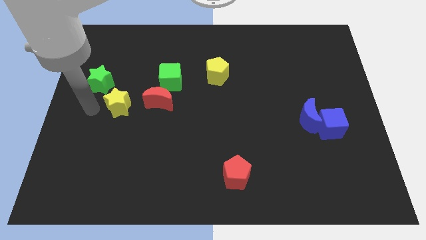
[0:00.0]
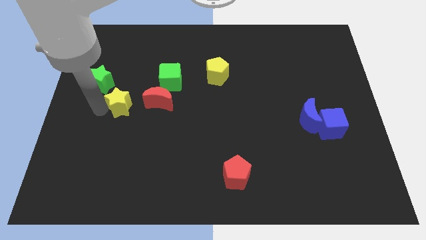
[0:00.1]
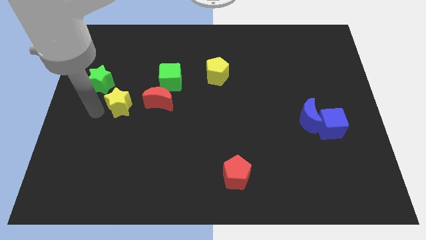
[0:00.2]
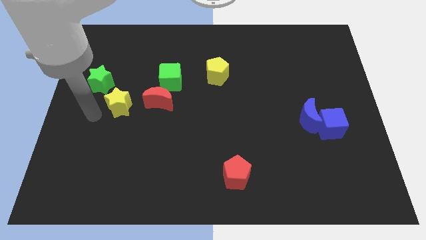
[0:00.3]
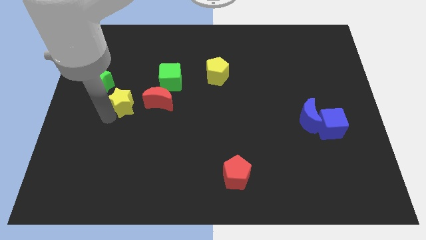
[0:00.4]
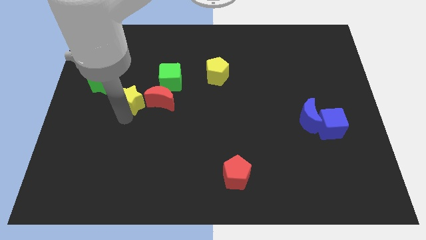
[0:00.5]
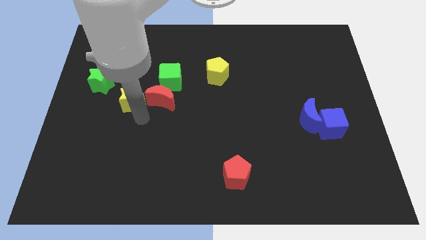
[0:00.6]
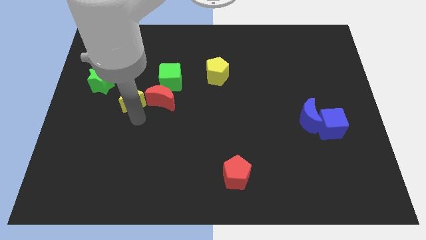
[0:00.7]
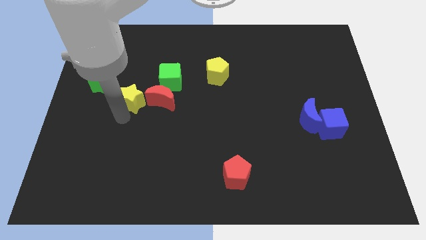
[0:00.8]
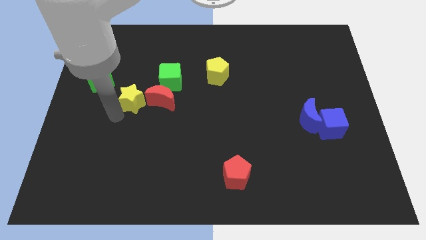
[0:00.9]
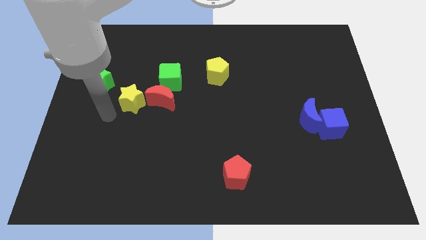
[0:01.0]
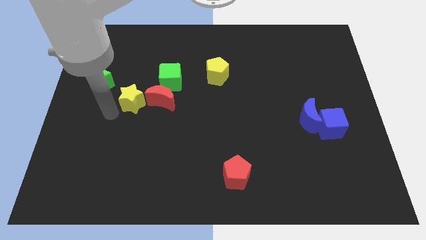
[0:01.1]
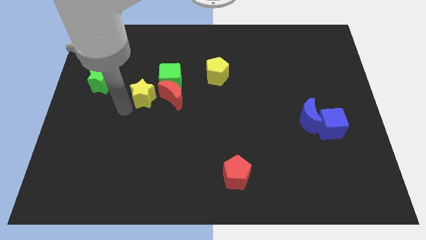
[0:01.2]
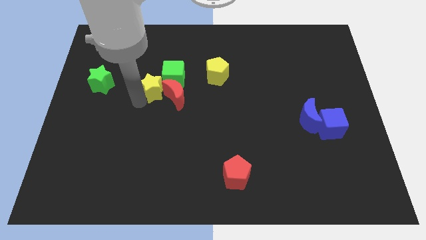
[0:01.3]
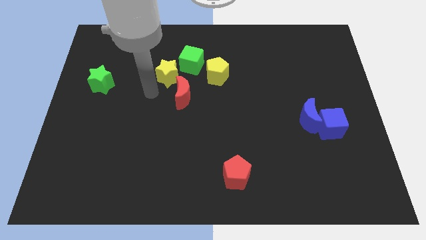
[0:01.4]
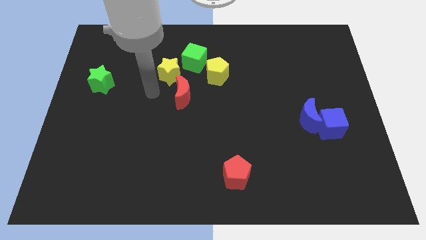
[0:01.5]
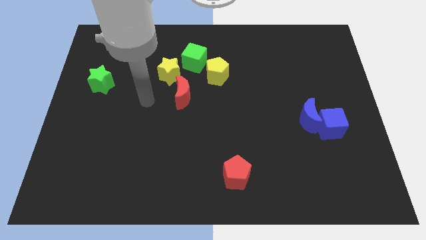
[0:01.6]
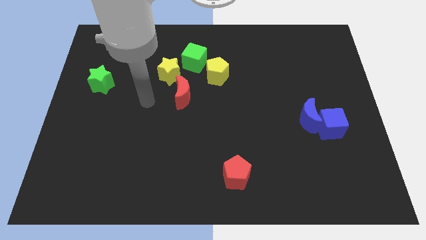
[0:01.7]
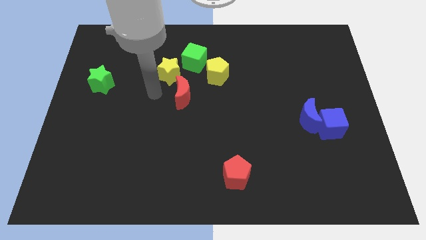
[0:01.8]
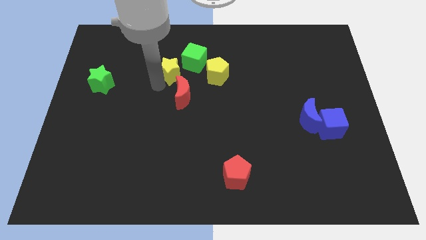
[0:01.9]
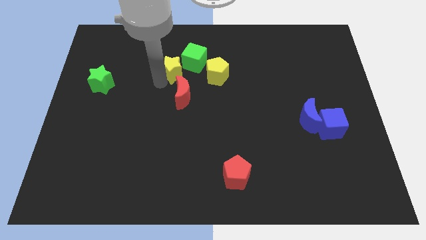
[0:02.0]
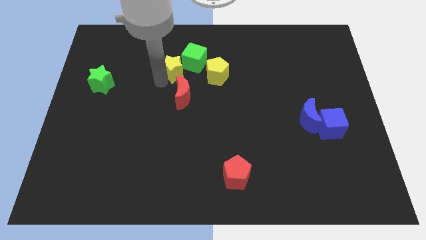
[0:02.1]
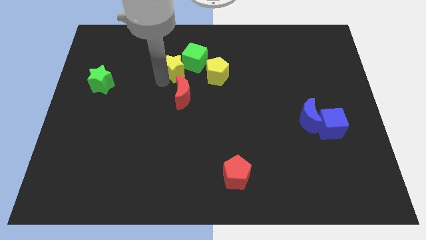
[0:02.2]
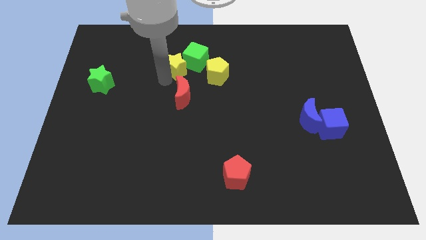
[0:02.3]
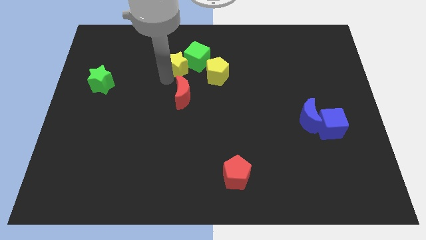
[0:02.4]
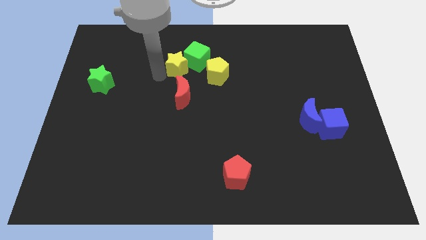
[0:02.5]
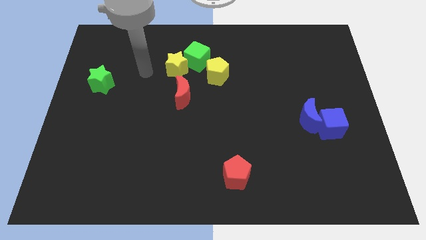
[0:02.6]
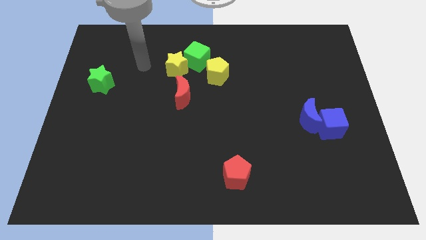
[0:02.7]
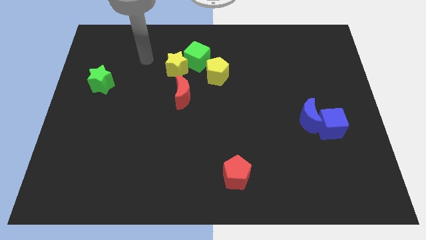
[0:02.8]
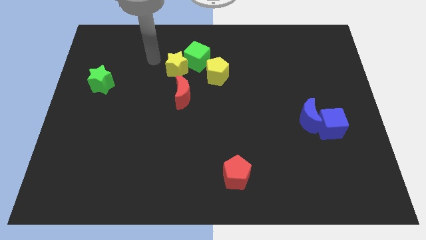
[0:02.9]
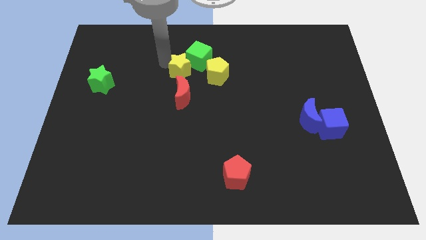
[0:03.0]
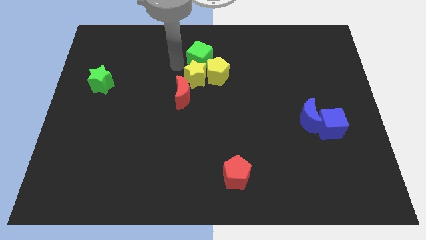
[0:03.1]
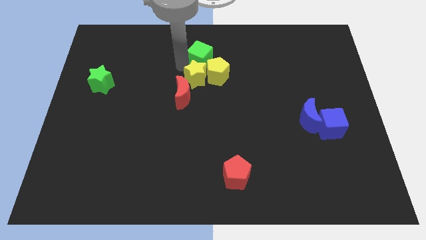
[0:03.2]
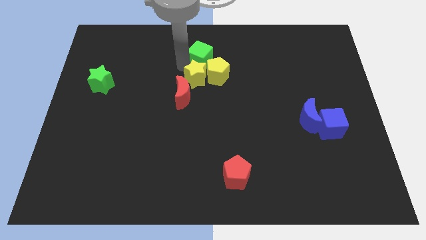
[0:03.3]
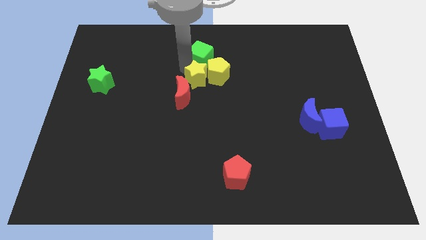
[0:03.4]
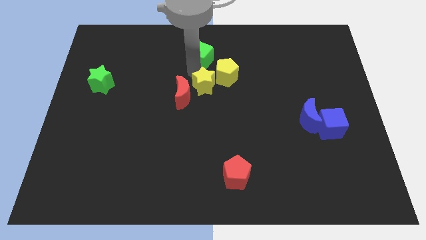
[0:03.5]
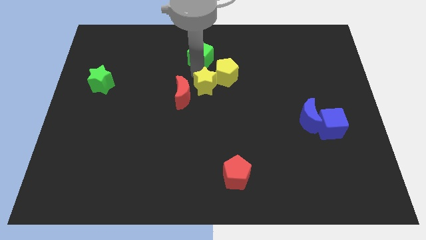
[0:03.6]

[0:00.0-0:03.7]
place the yellow star into the red crescent and yellow pentagon

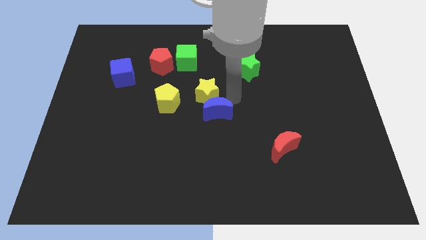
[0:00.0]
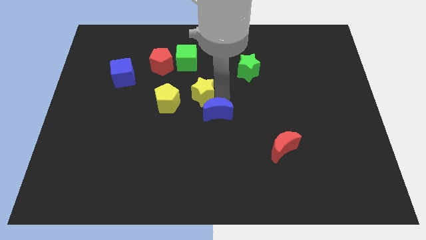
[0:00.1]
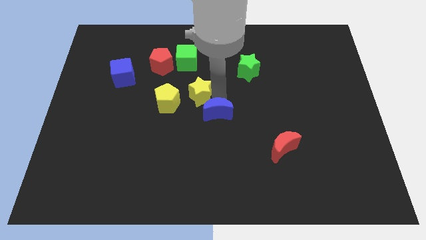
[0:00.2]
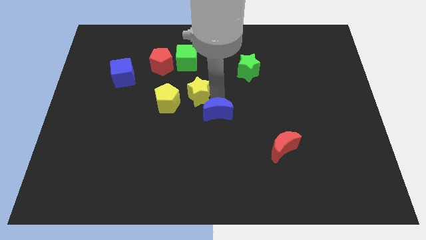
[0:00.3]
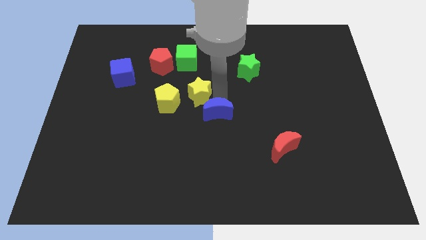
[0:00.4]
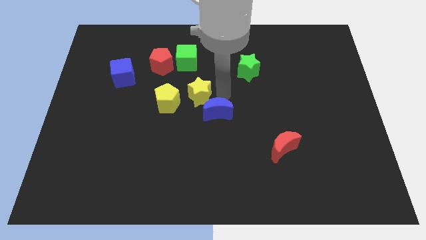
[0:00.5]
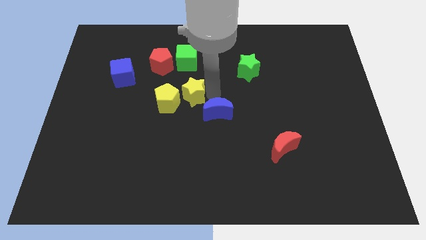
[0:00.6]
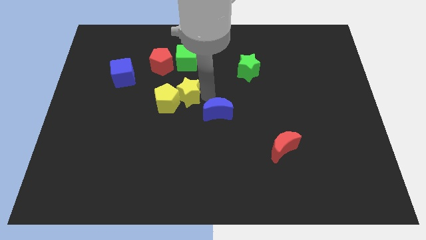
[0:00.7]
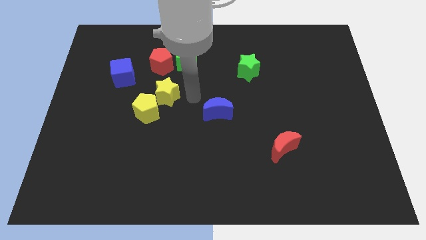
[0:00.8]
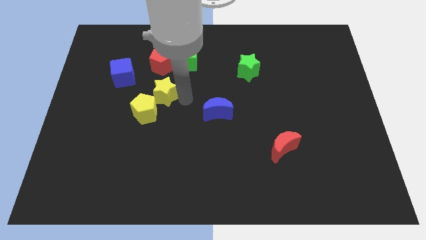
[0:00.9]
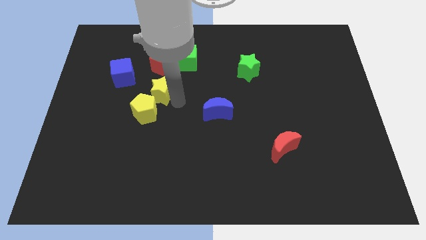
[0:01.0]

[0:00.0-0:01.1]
push the yellow star into the yellow pentagon

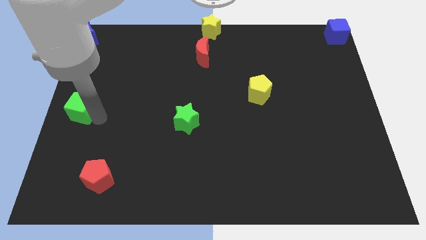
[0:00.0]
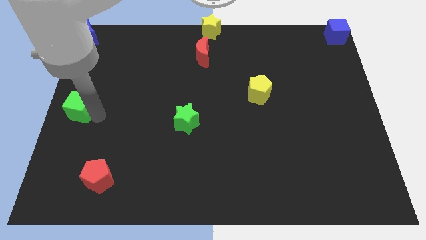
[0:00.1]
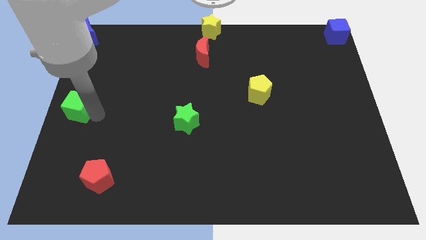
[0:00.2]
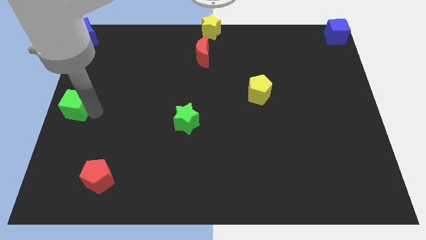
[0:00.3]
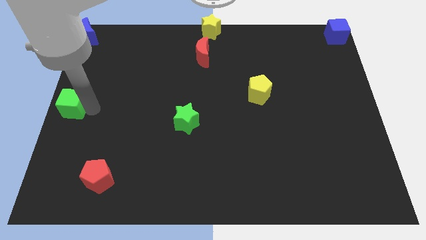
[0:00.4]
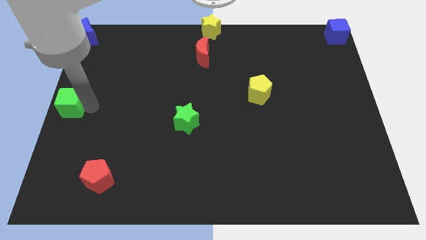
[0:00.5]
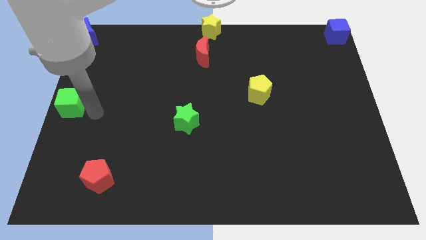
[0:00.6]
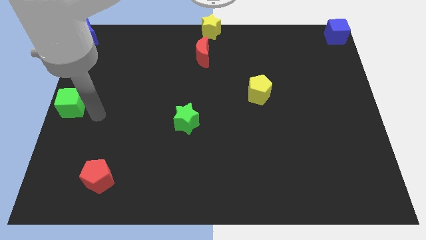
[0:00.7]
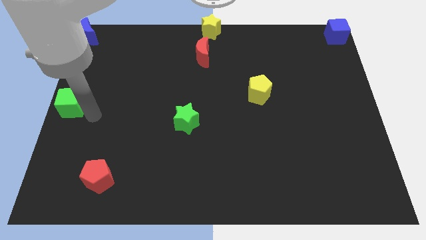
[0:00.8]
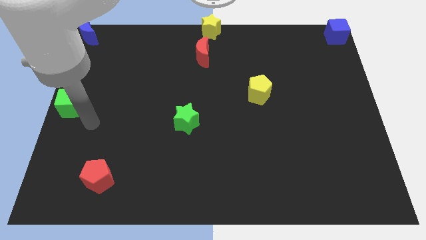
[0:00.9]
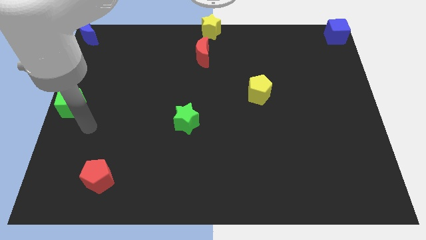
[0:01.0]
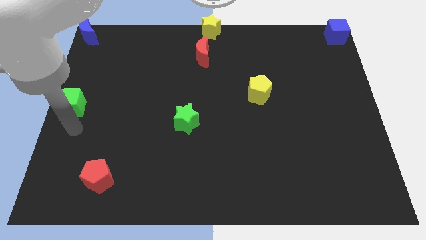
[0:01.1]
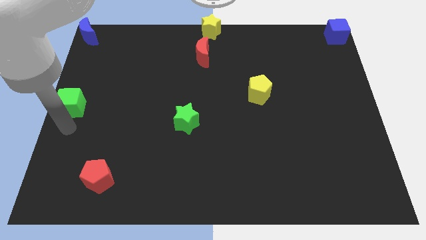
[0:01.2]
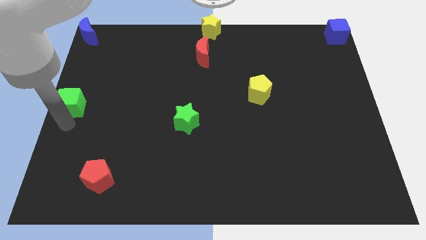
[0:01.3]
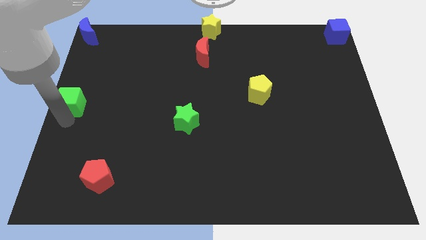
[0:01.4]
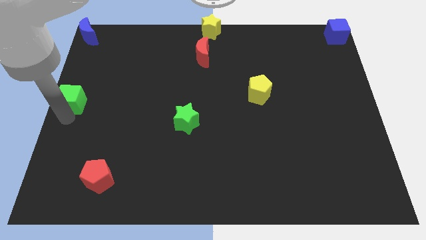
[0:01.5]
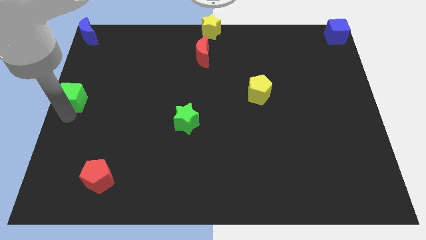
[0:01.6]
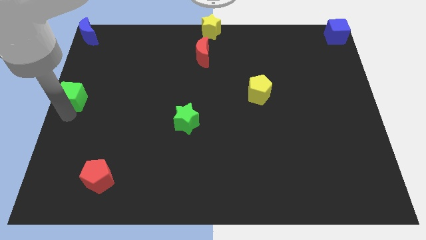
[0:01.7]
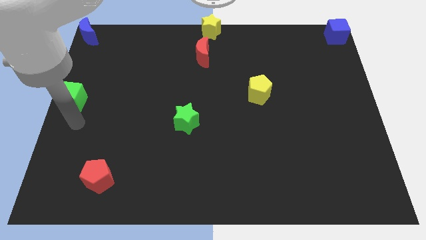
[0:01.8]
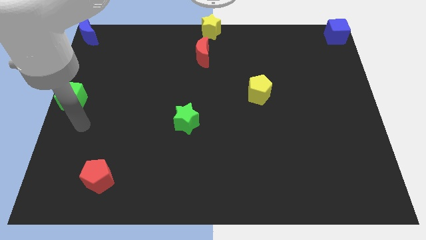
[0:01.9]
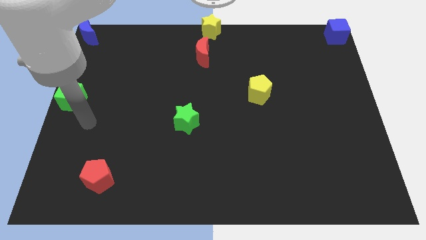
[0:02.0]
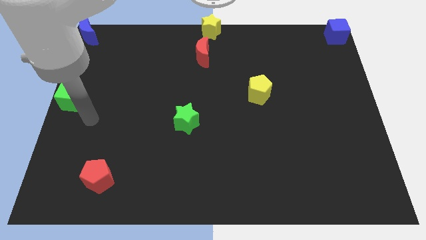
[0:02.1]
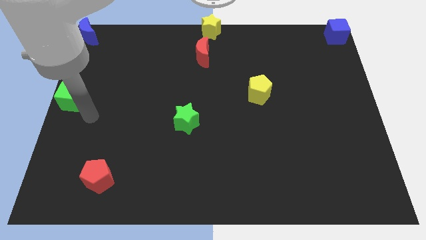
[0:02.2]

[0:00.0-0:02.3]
place the green cube vertically below the blue crescent

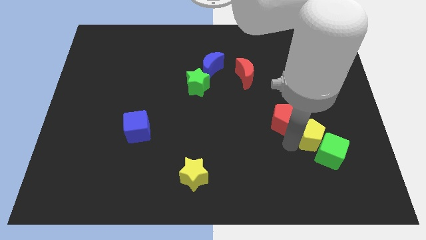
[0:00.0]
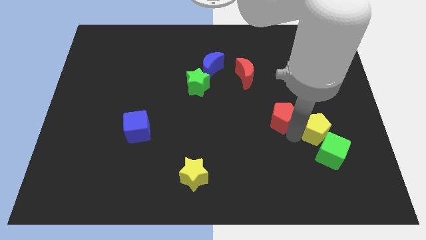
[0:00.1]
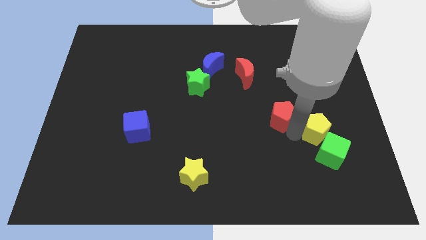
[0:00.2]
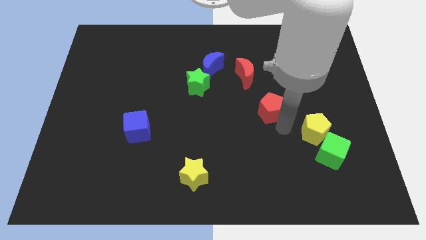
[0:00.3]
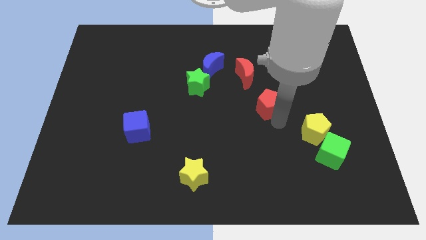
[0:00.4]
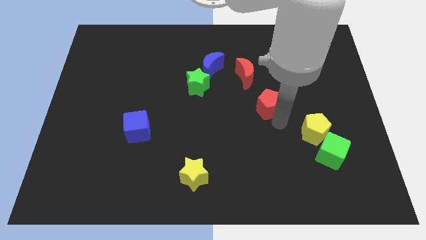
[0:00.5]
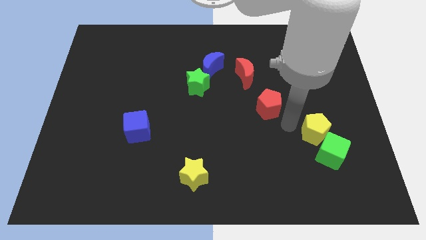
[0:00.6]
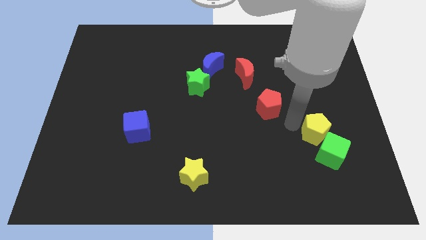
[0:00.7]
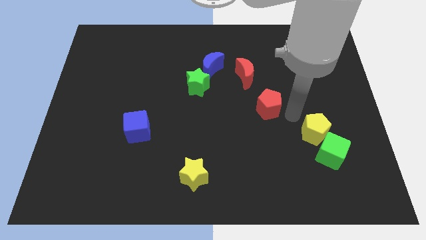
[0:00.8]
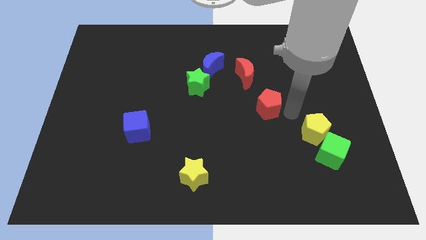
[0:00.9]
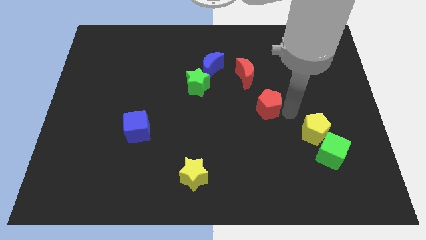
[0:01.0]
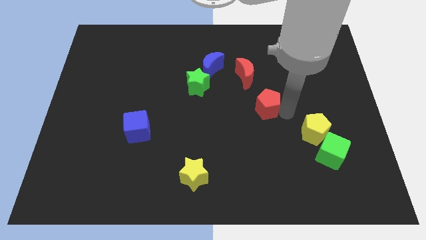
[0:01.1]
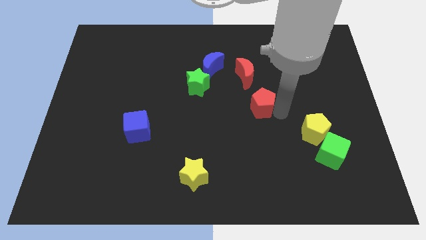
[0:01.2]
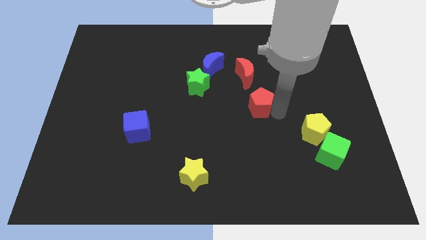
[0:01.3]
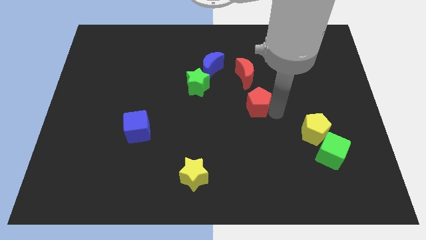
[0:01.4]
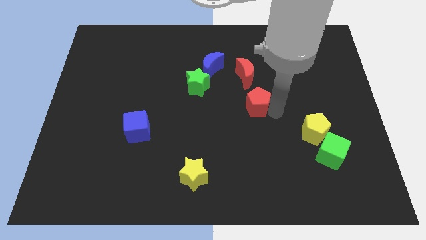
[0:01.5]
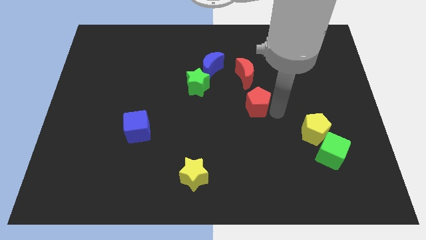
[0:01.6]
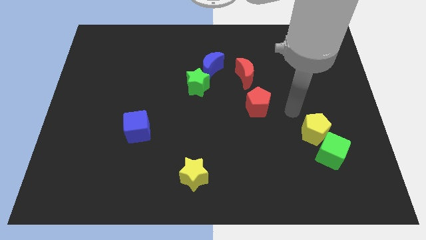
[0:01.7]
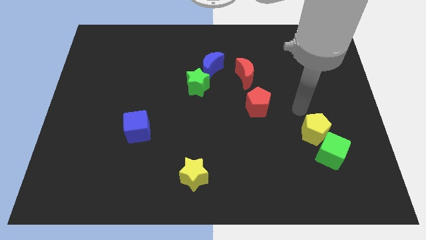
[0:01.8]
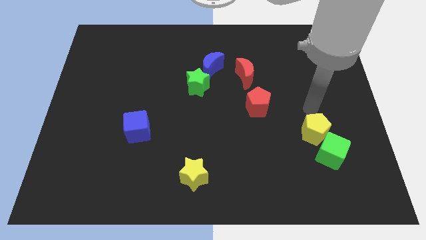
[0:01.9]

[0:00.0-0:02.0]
place the red pentagon below the red moon
